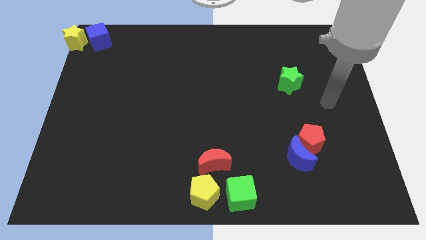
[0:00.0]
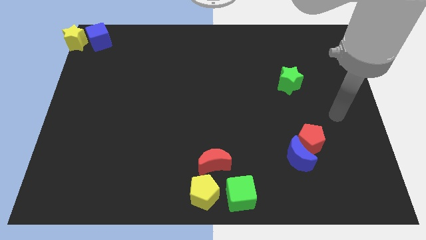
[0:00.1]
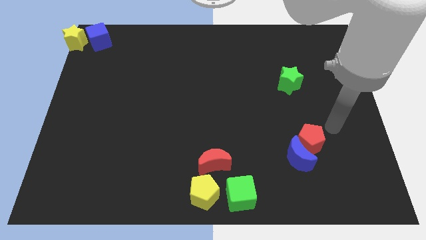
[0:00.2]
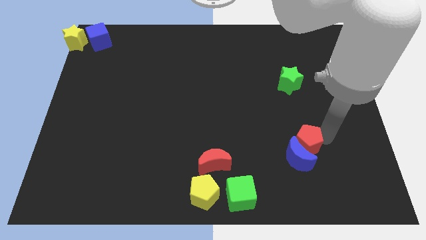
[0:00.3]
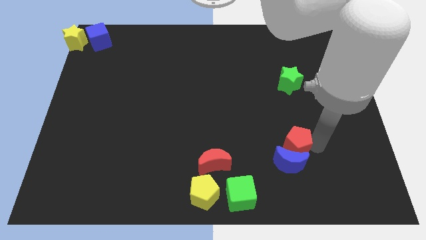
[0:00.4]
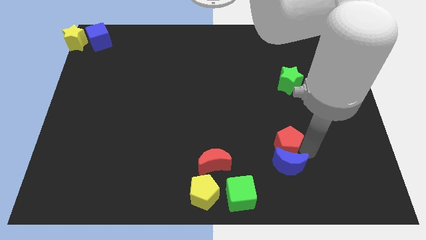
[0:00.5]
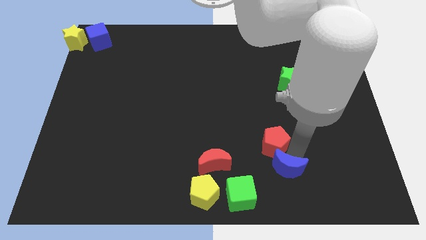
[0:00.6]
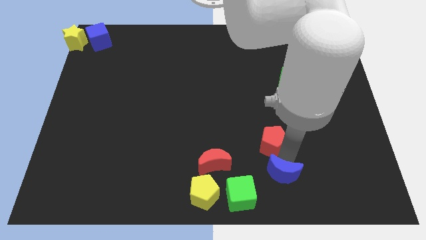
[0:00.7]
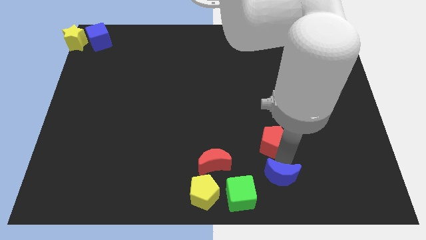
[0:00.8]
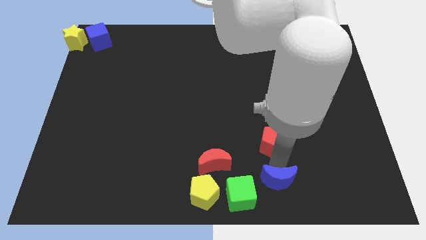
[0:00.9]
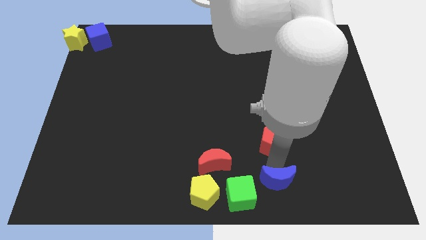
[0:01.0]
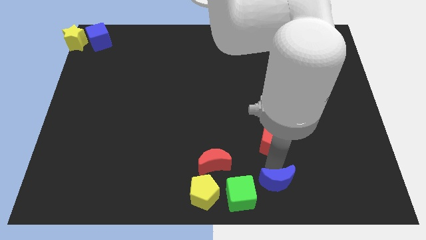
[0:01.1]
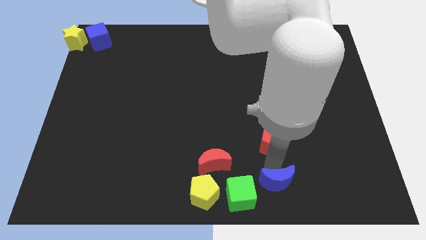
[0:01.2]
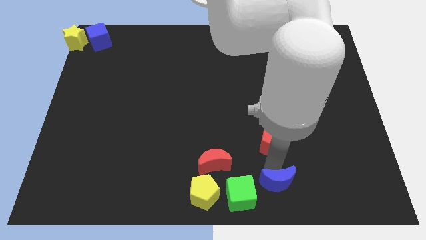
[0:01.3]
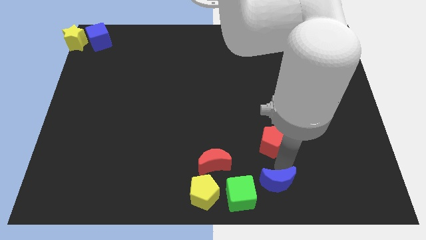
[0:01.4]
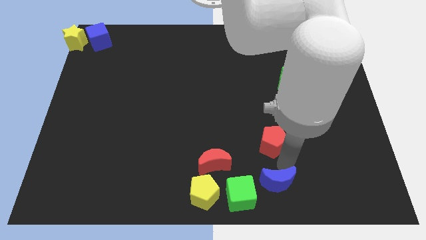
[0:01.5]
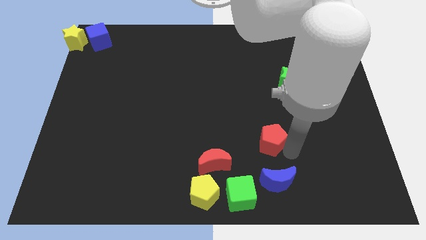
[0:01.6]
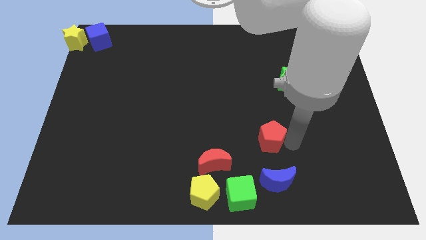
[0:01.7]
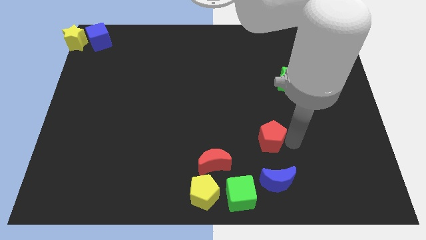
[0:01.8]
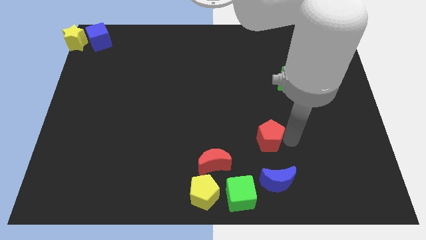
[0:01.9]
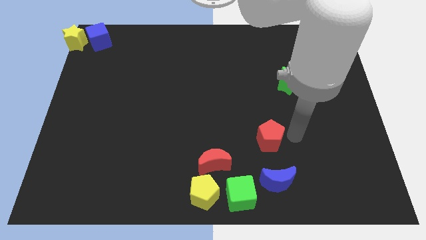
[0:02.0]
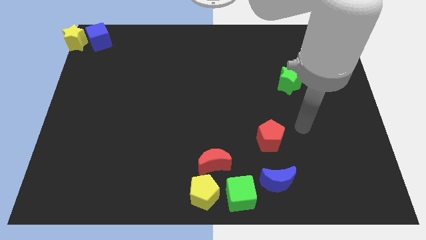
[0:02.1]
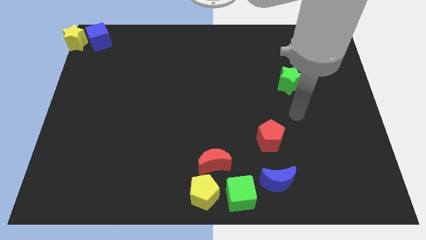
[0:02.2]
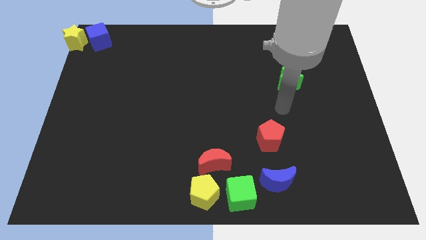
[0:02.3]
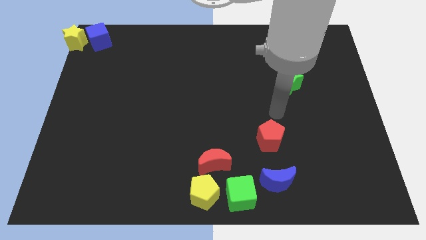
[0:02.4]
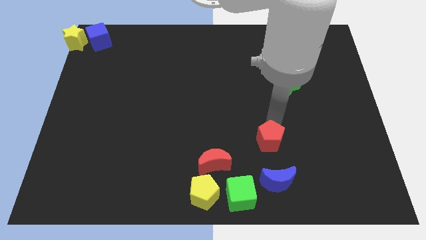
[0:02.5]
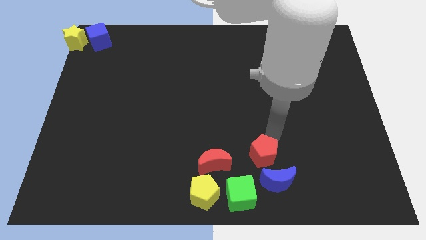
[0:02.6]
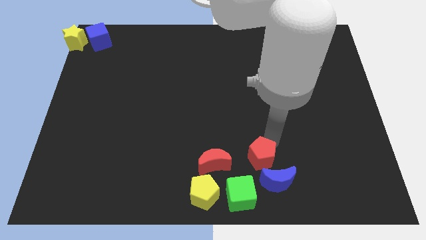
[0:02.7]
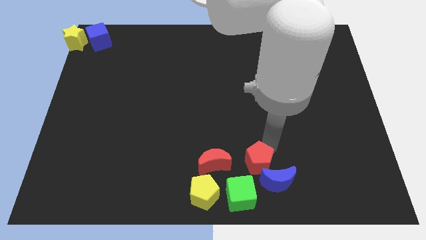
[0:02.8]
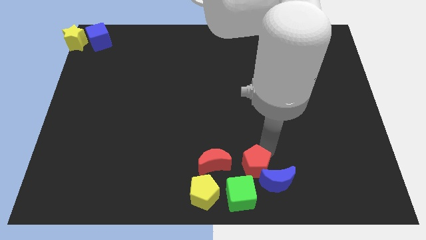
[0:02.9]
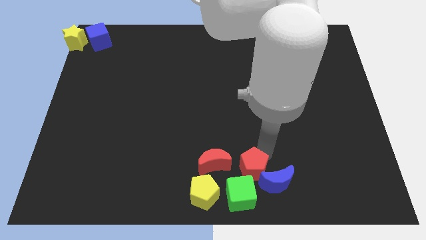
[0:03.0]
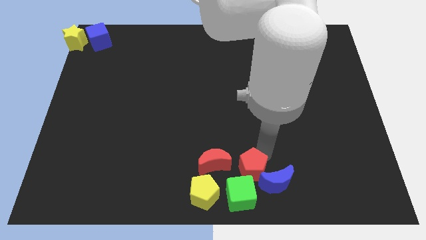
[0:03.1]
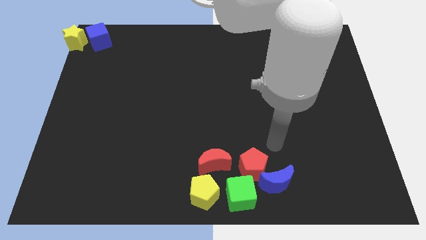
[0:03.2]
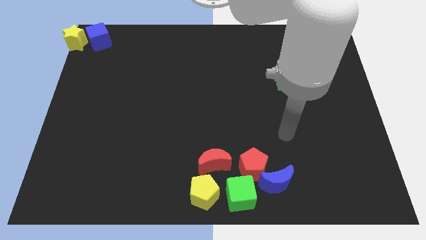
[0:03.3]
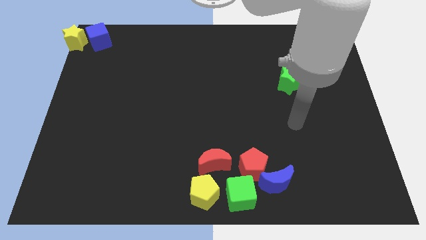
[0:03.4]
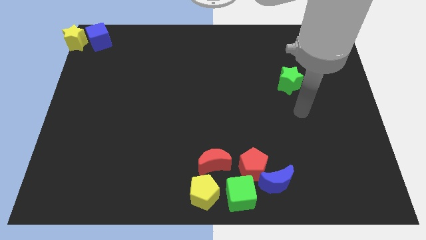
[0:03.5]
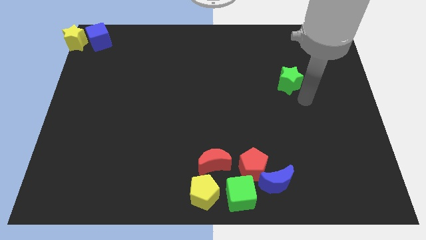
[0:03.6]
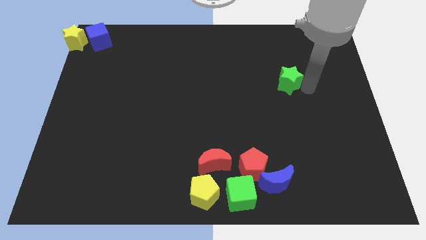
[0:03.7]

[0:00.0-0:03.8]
push the red pentagon into the blue moon

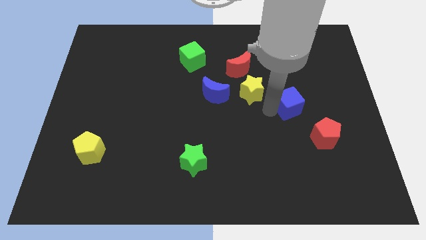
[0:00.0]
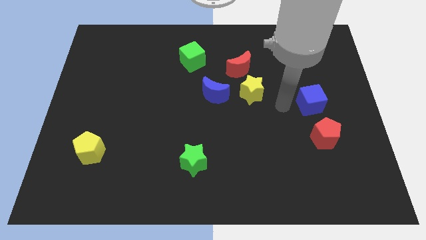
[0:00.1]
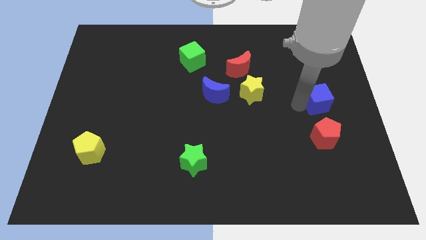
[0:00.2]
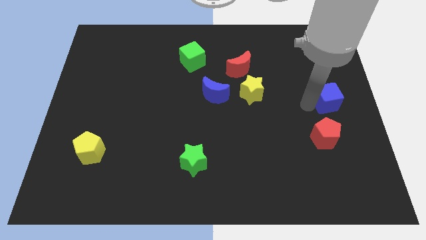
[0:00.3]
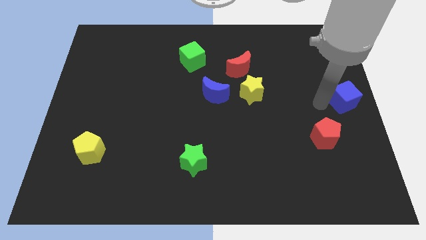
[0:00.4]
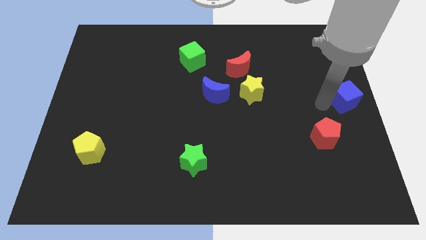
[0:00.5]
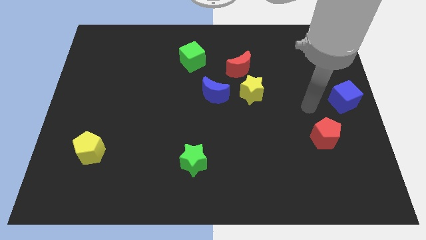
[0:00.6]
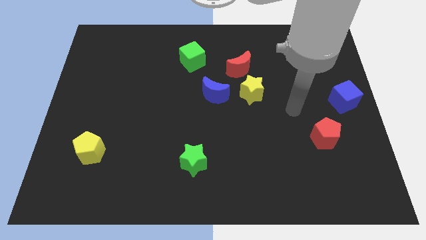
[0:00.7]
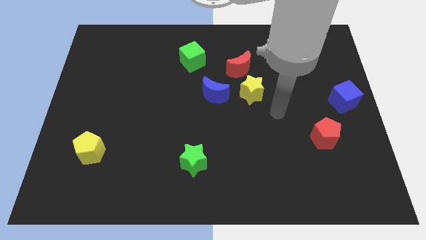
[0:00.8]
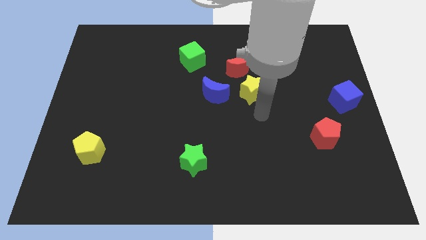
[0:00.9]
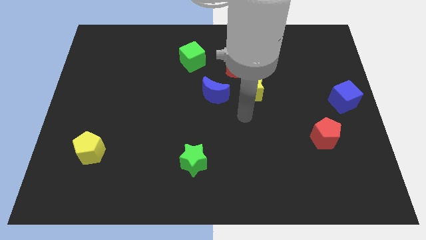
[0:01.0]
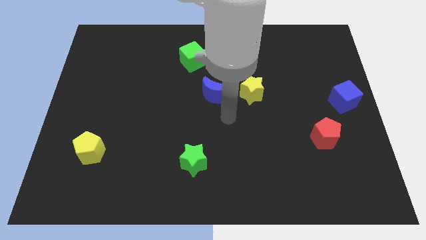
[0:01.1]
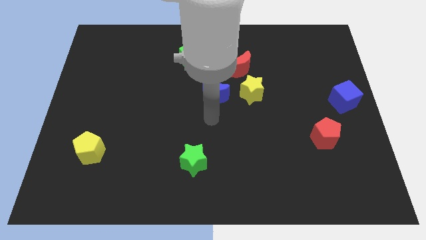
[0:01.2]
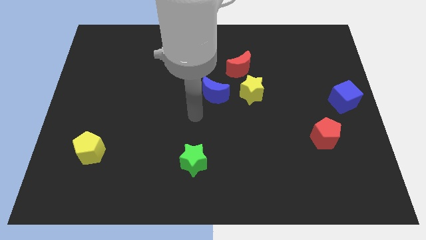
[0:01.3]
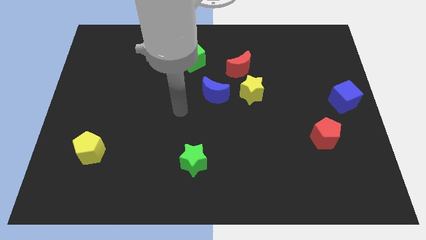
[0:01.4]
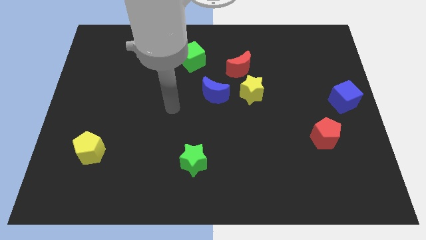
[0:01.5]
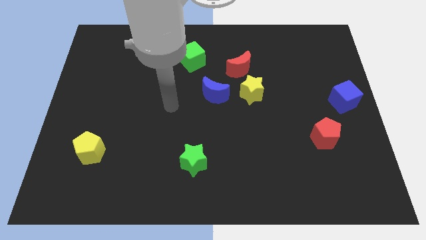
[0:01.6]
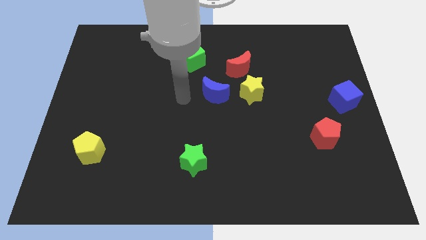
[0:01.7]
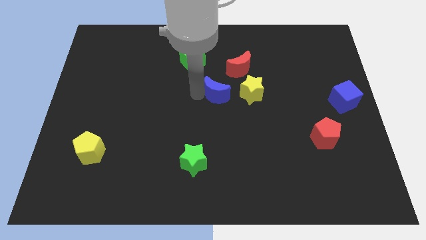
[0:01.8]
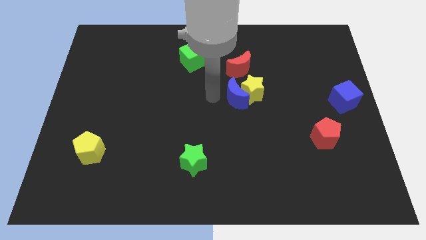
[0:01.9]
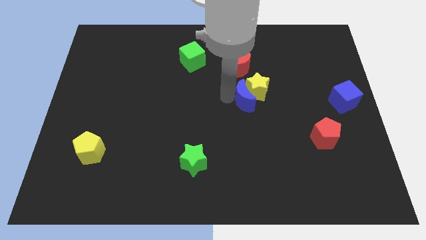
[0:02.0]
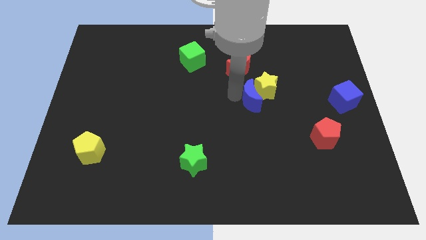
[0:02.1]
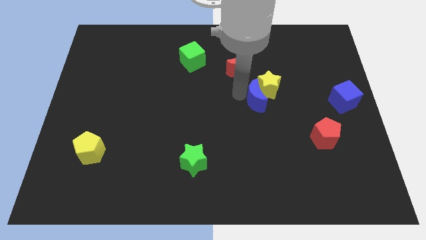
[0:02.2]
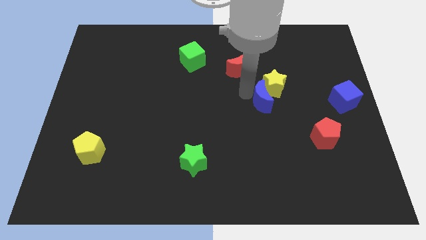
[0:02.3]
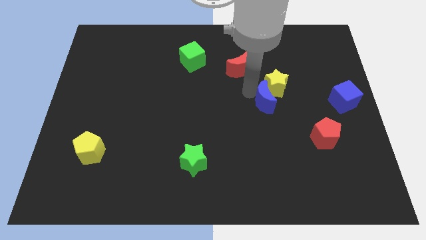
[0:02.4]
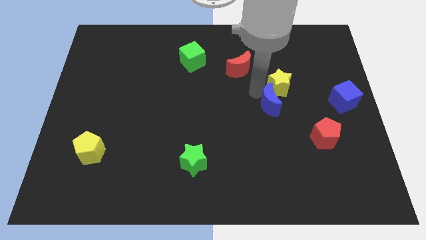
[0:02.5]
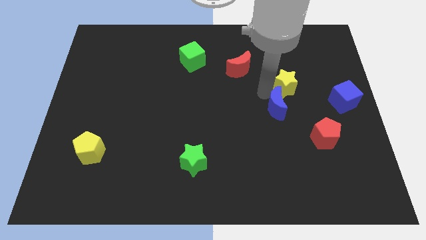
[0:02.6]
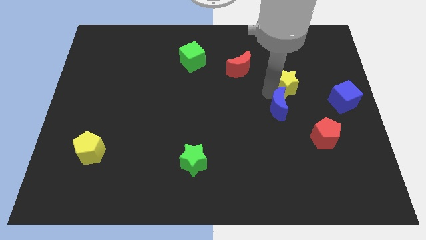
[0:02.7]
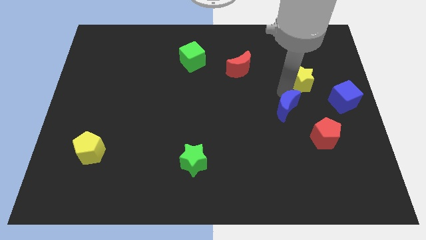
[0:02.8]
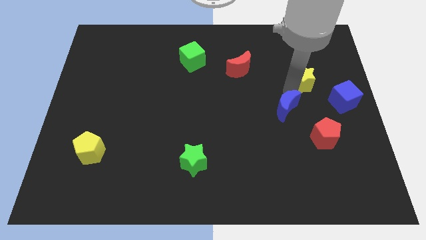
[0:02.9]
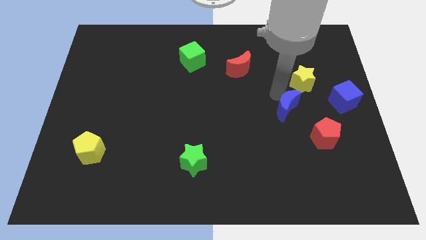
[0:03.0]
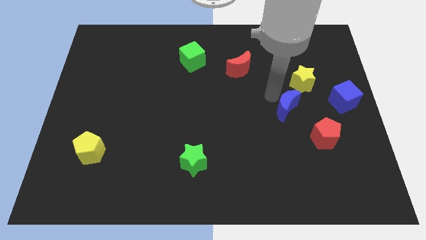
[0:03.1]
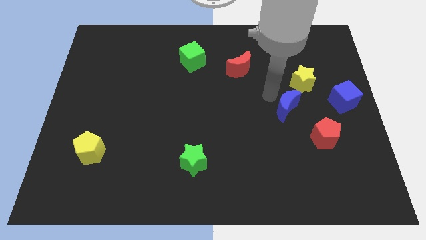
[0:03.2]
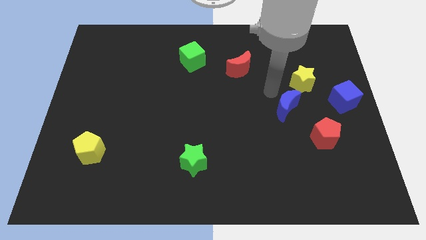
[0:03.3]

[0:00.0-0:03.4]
push the blue moon and yellow star towards the right side

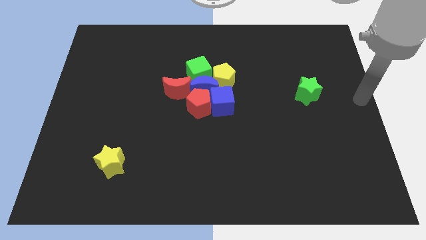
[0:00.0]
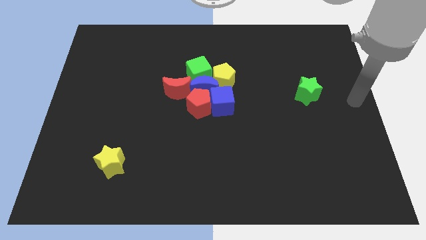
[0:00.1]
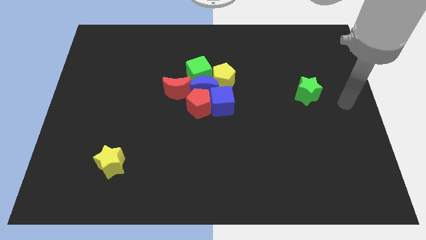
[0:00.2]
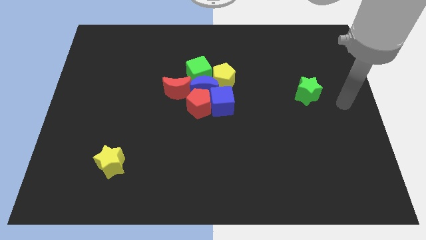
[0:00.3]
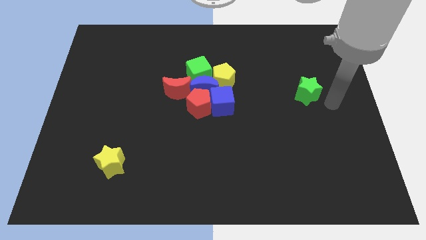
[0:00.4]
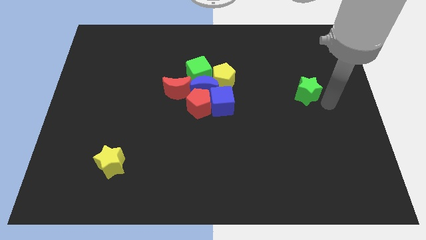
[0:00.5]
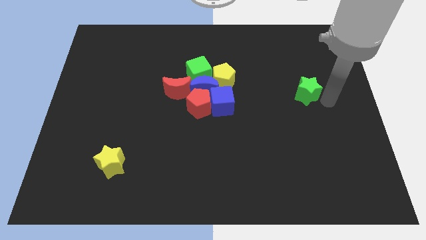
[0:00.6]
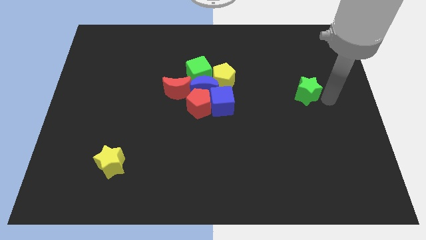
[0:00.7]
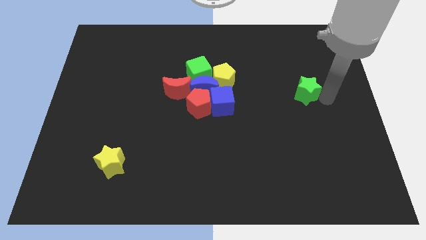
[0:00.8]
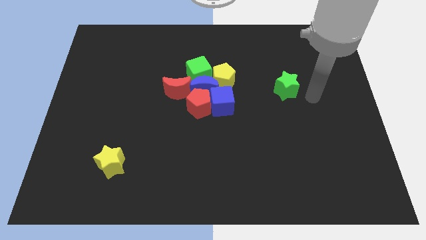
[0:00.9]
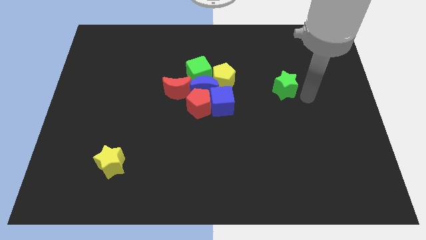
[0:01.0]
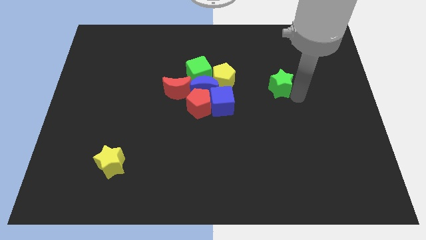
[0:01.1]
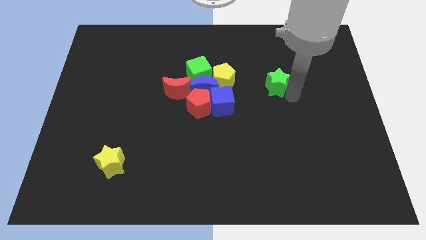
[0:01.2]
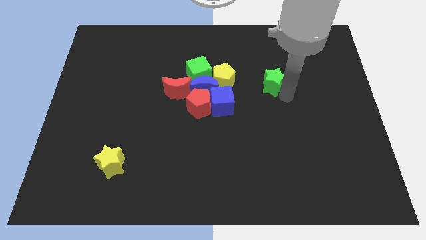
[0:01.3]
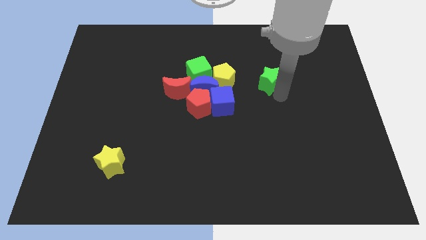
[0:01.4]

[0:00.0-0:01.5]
push green star slightly towards left side

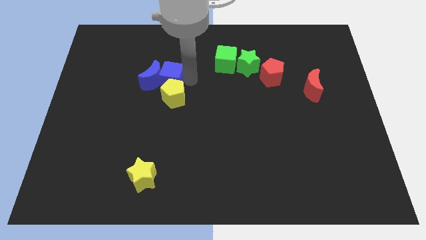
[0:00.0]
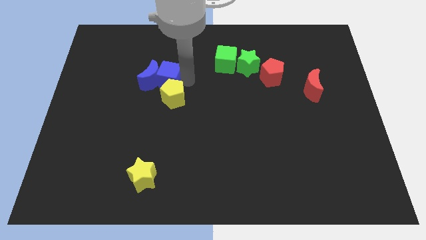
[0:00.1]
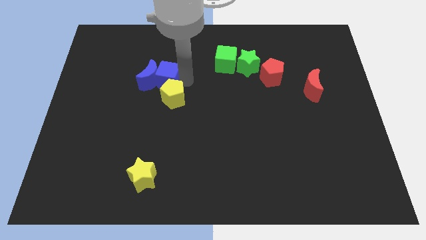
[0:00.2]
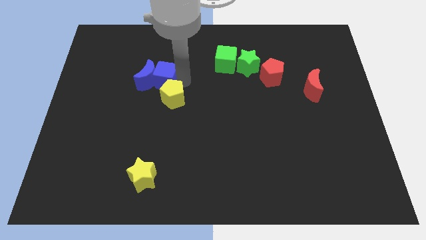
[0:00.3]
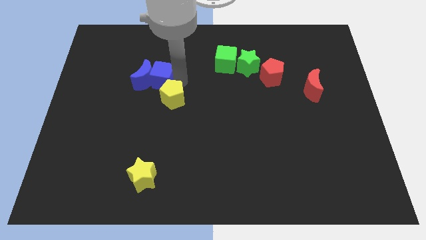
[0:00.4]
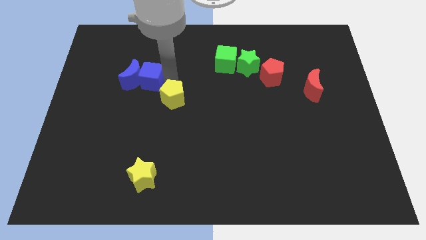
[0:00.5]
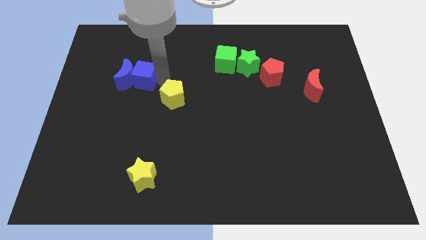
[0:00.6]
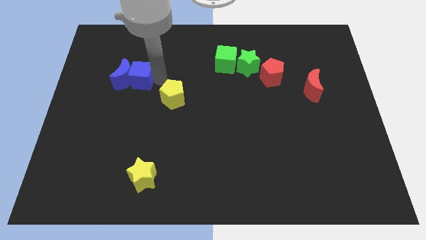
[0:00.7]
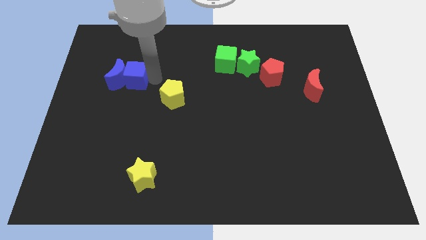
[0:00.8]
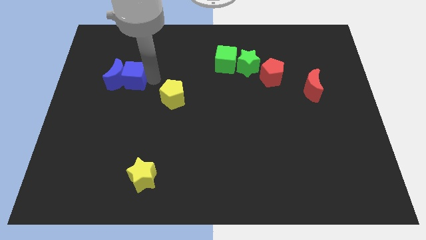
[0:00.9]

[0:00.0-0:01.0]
separate blue cubes from yellow pentagon
